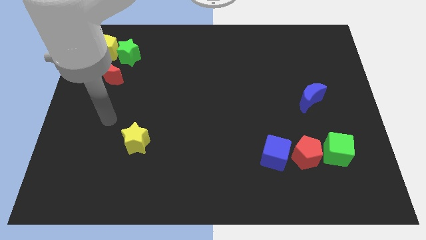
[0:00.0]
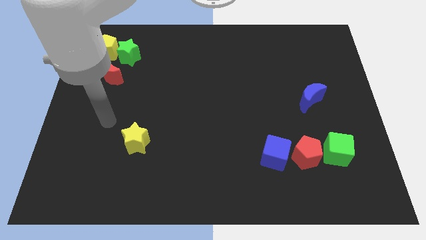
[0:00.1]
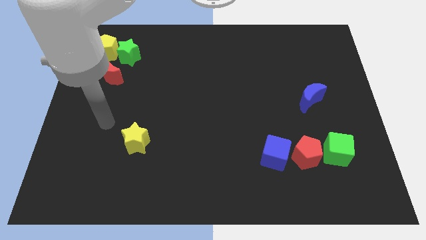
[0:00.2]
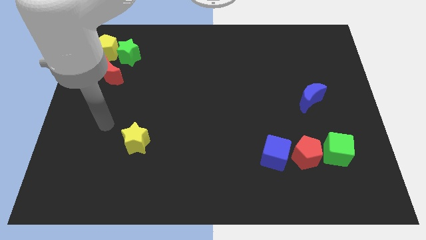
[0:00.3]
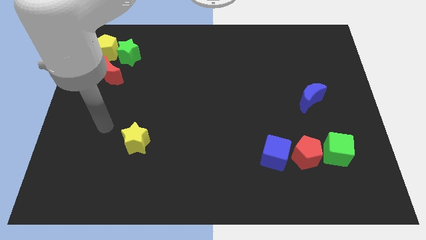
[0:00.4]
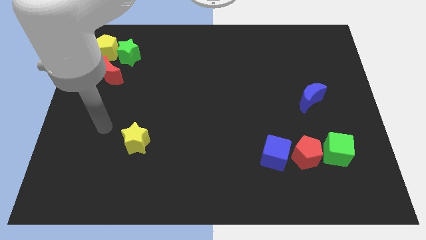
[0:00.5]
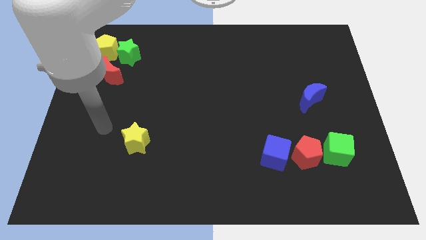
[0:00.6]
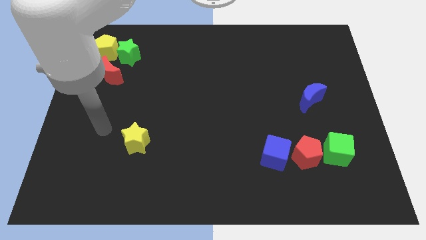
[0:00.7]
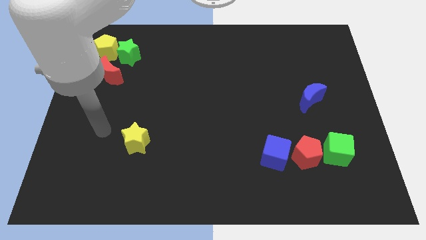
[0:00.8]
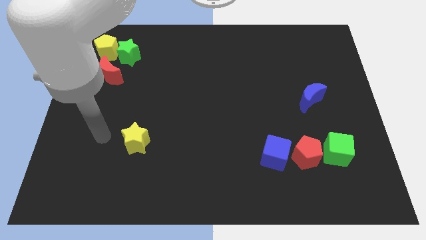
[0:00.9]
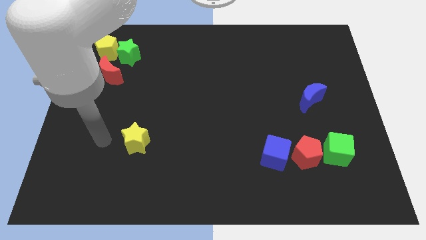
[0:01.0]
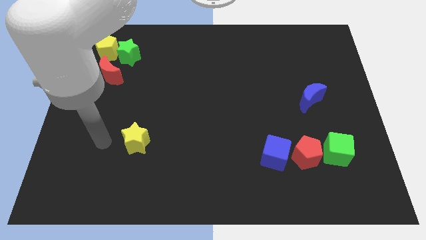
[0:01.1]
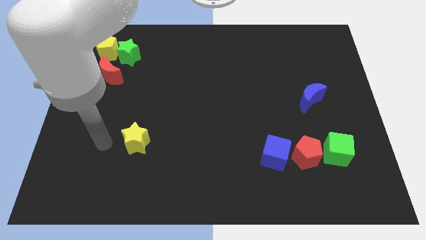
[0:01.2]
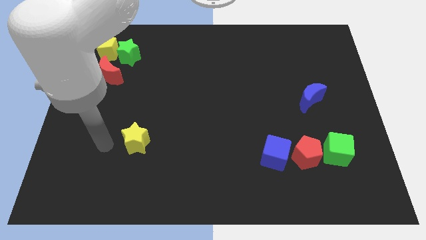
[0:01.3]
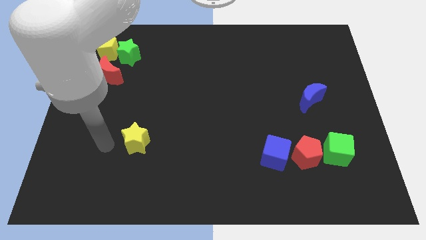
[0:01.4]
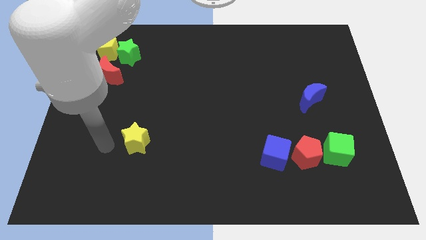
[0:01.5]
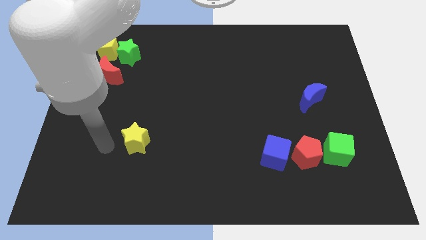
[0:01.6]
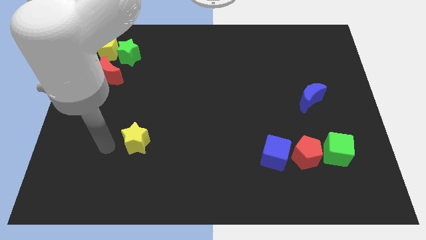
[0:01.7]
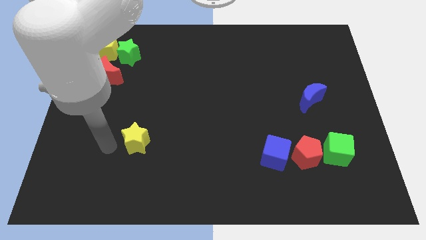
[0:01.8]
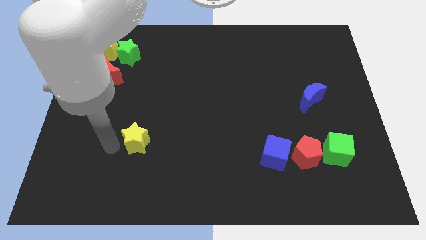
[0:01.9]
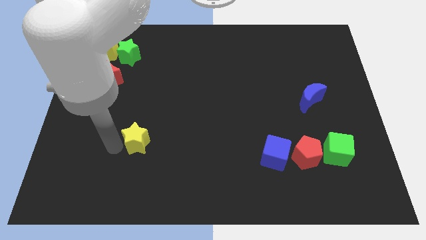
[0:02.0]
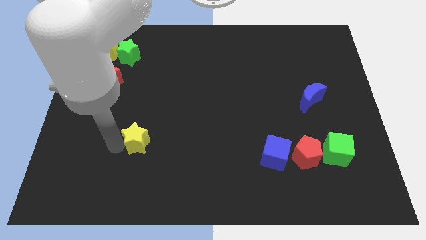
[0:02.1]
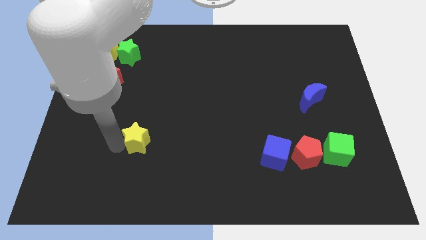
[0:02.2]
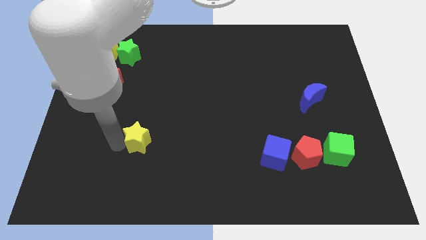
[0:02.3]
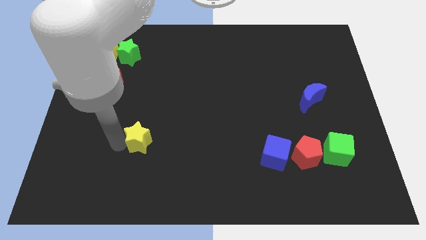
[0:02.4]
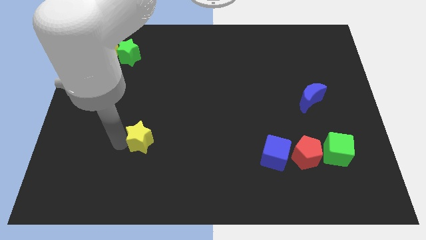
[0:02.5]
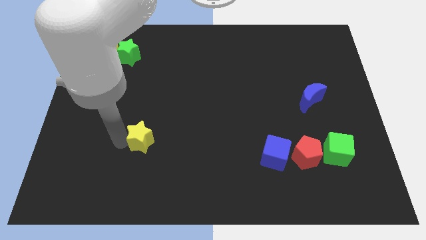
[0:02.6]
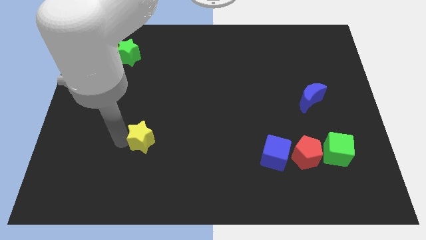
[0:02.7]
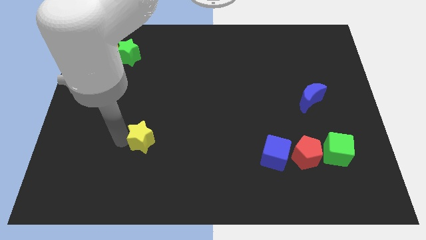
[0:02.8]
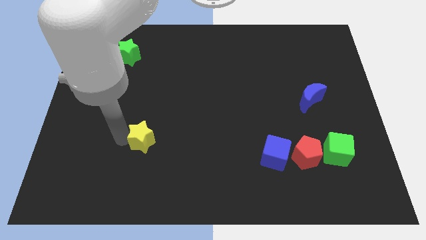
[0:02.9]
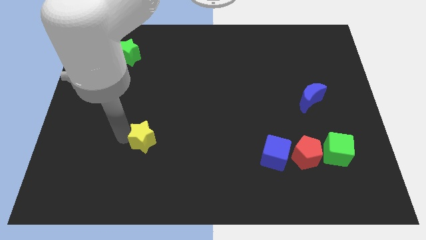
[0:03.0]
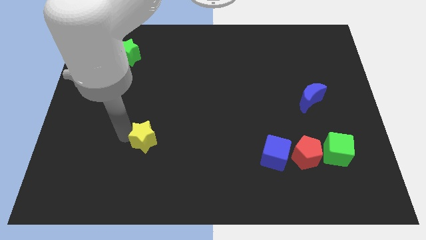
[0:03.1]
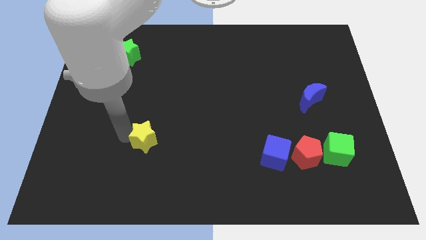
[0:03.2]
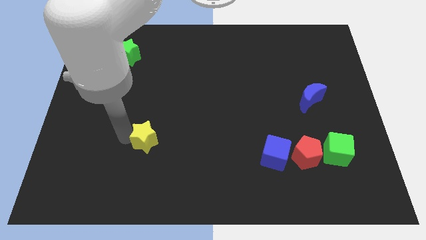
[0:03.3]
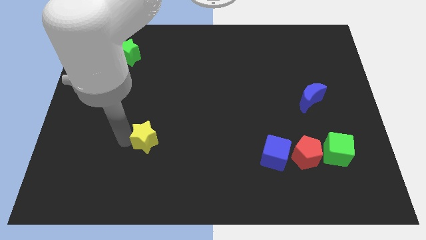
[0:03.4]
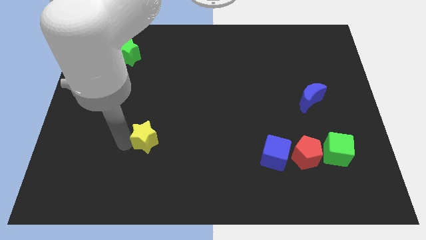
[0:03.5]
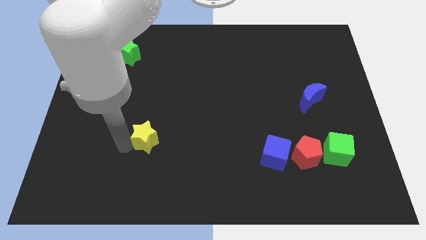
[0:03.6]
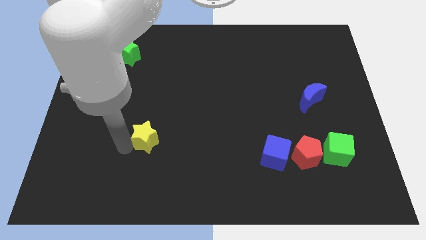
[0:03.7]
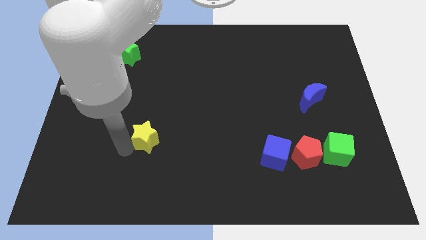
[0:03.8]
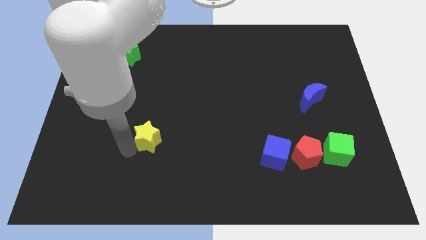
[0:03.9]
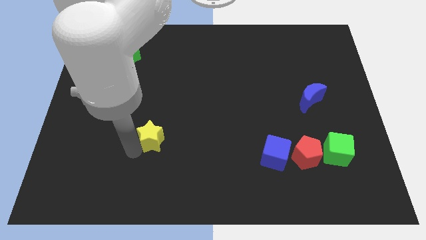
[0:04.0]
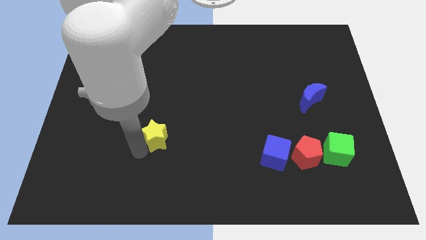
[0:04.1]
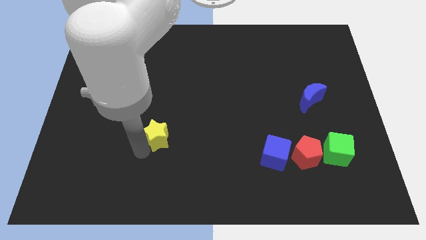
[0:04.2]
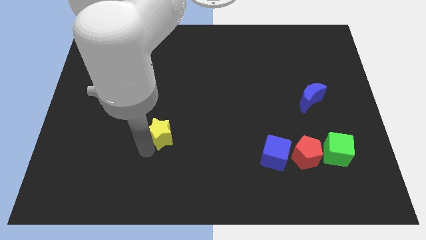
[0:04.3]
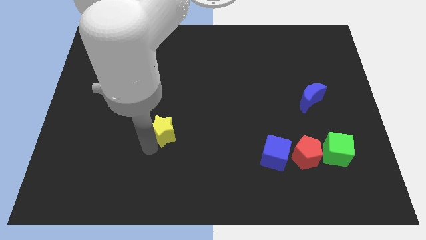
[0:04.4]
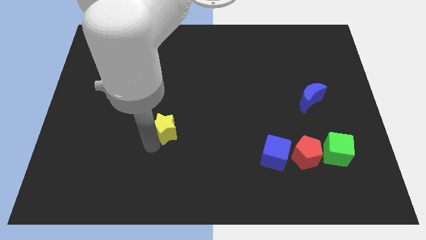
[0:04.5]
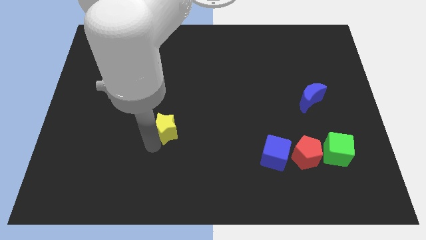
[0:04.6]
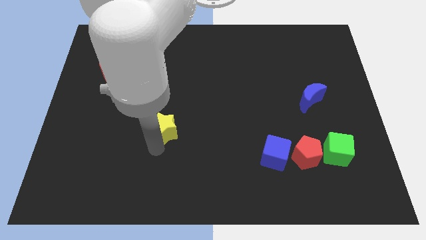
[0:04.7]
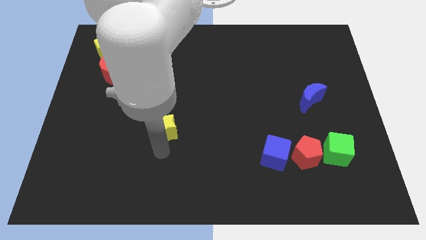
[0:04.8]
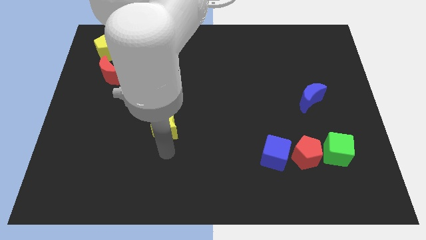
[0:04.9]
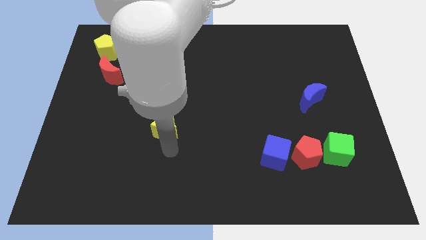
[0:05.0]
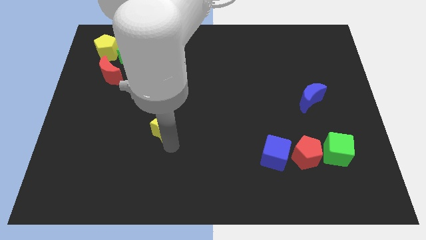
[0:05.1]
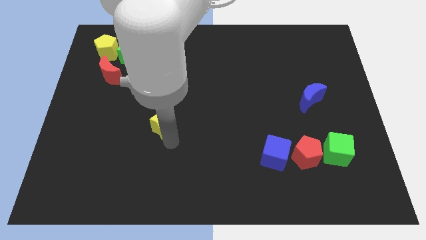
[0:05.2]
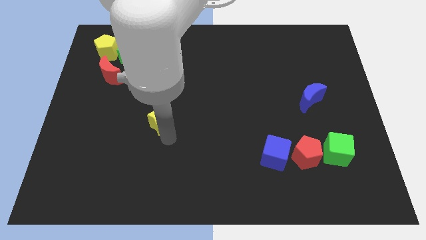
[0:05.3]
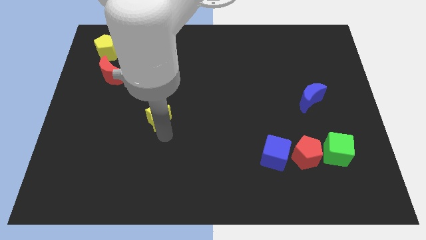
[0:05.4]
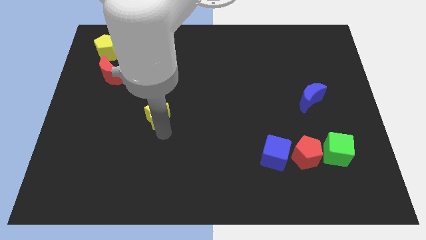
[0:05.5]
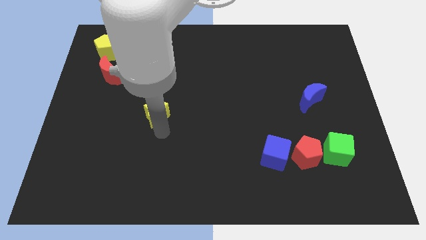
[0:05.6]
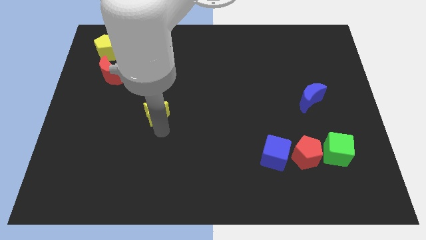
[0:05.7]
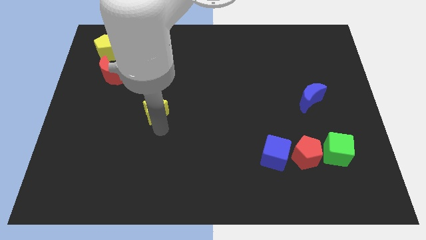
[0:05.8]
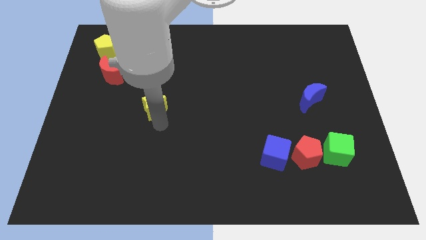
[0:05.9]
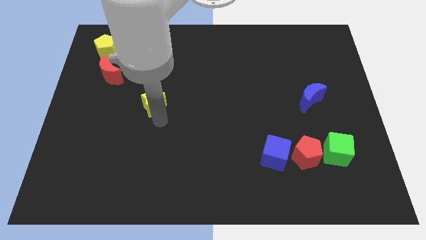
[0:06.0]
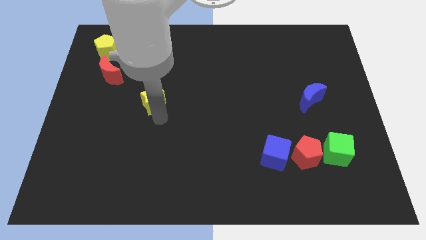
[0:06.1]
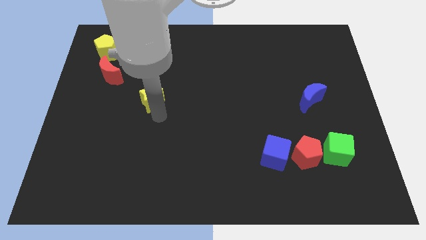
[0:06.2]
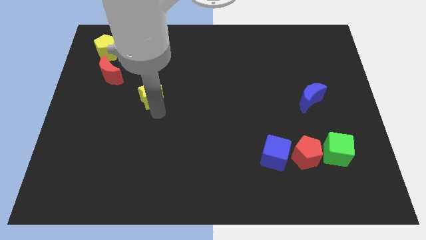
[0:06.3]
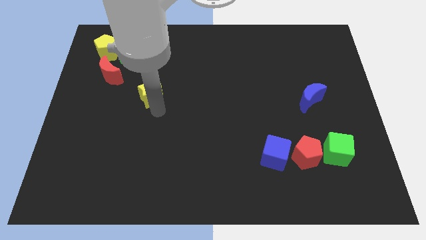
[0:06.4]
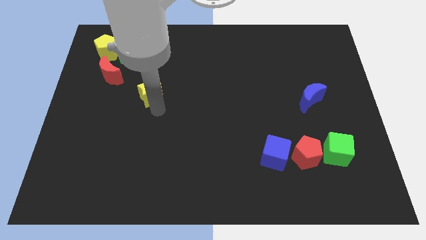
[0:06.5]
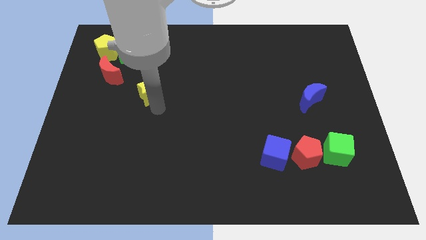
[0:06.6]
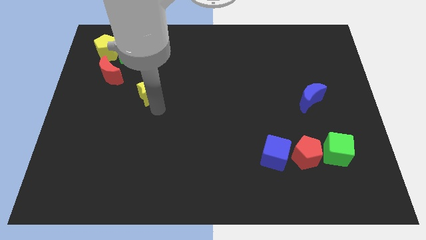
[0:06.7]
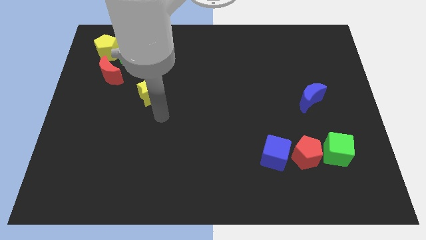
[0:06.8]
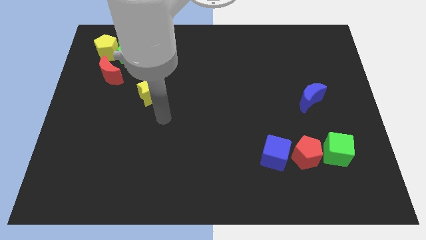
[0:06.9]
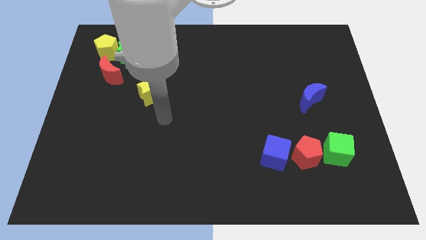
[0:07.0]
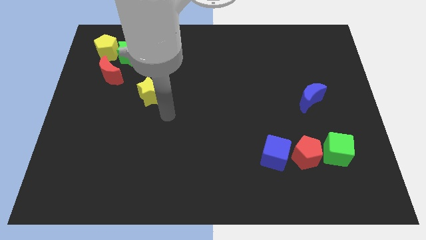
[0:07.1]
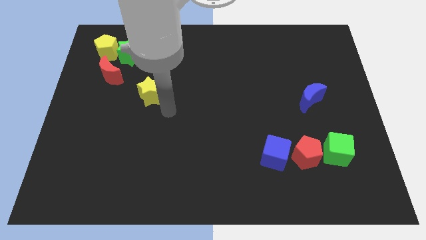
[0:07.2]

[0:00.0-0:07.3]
push the yellow star closer to the green star

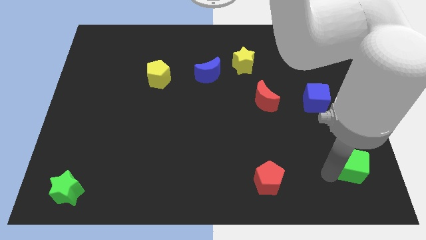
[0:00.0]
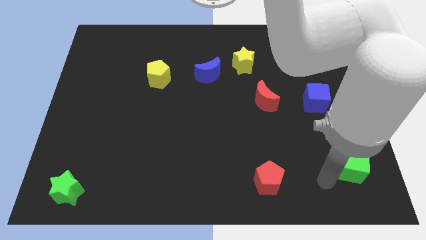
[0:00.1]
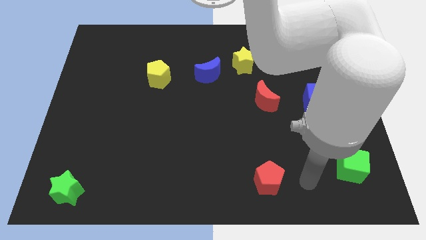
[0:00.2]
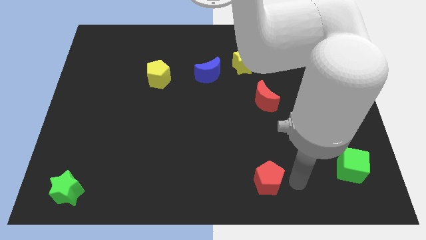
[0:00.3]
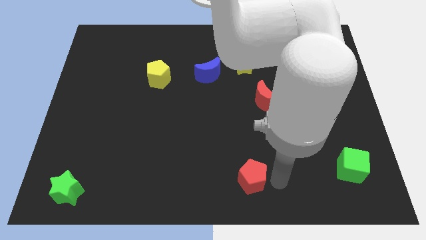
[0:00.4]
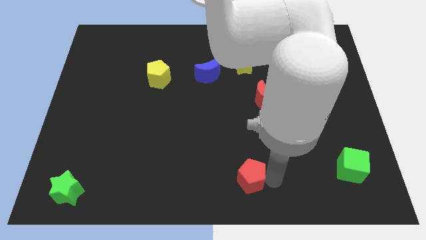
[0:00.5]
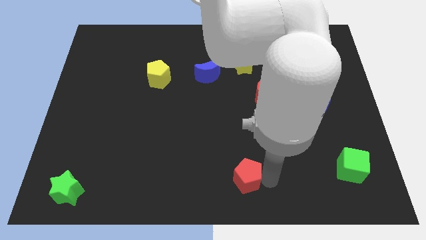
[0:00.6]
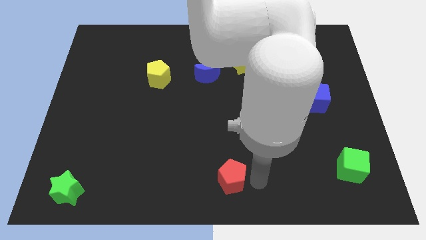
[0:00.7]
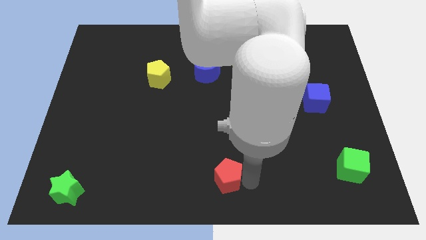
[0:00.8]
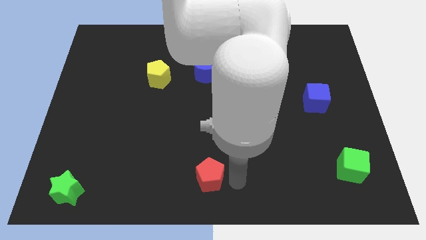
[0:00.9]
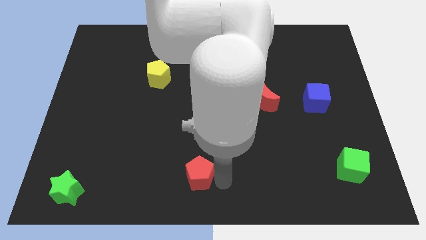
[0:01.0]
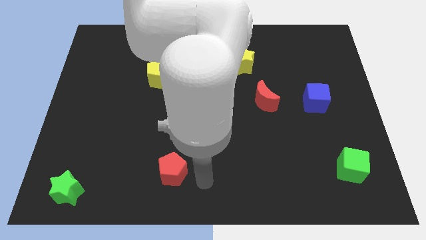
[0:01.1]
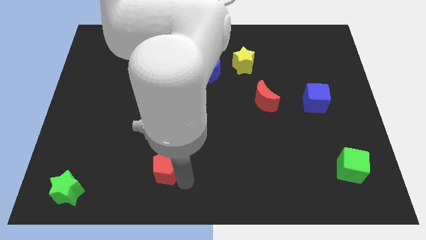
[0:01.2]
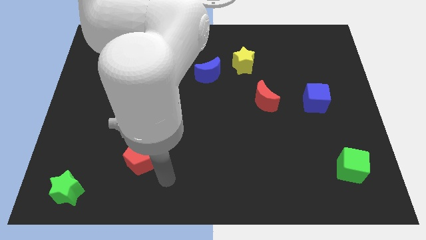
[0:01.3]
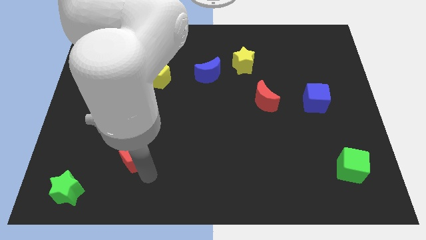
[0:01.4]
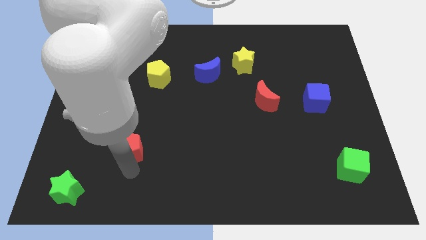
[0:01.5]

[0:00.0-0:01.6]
place the red pentagon diagonal to the green star

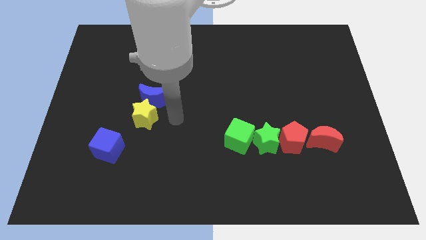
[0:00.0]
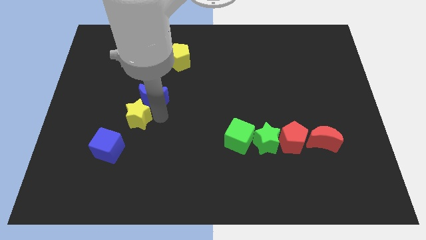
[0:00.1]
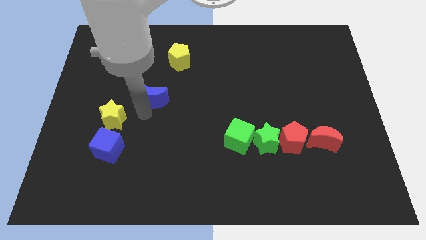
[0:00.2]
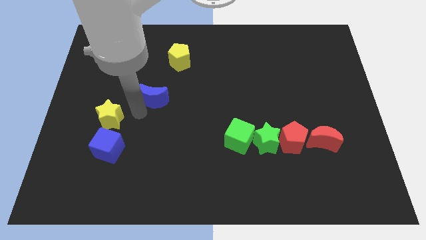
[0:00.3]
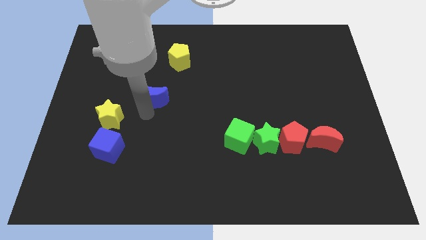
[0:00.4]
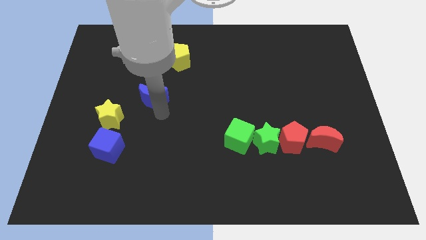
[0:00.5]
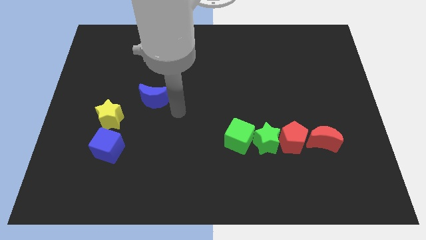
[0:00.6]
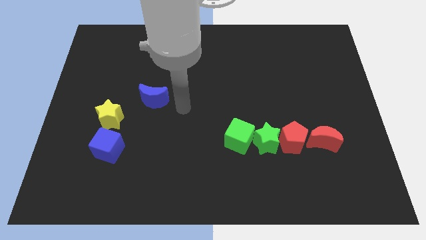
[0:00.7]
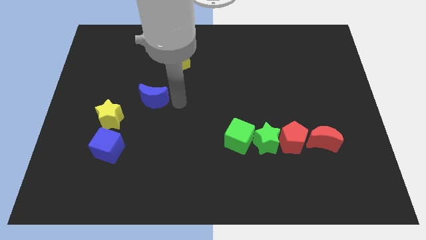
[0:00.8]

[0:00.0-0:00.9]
push the yellow star towards the left center of the board
